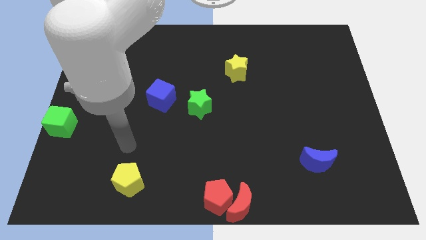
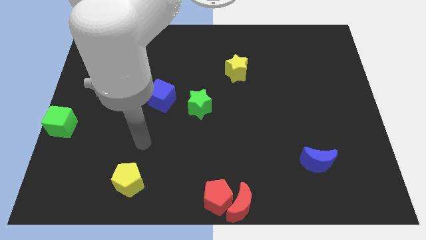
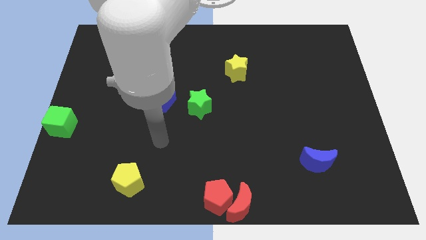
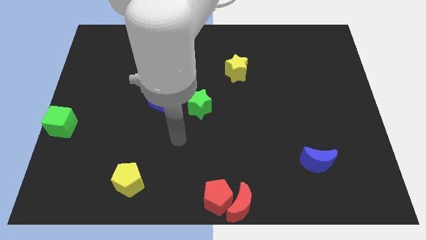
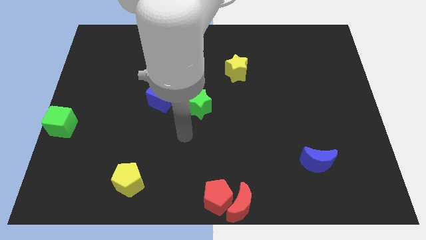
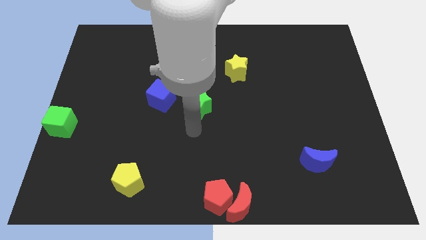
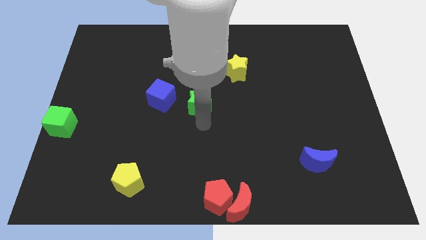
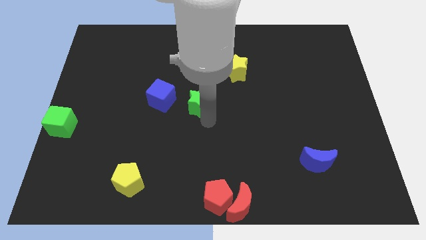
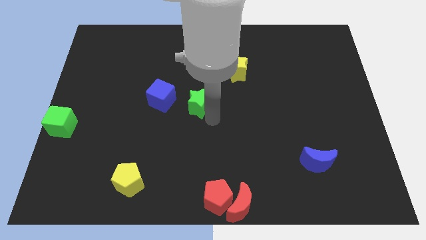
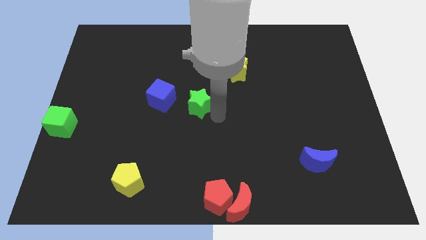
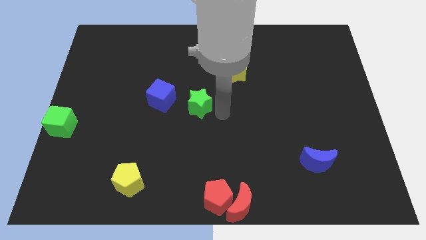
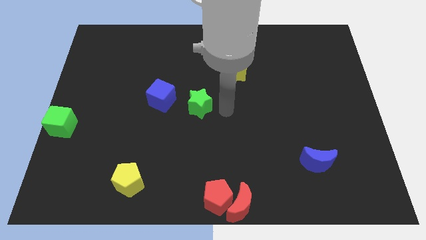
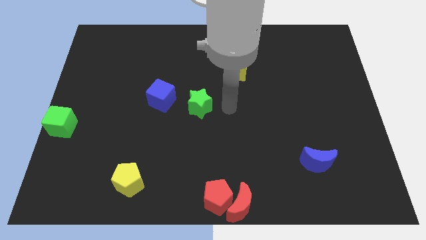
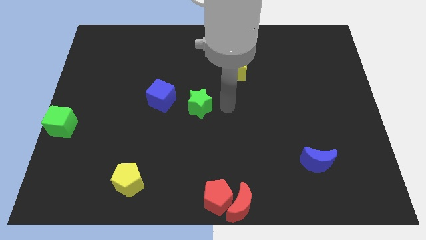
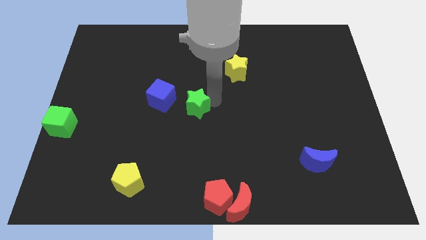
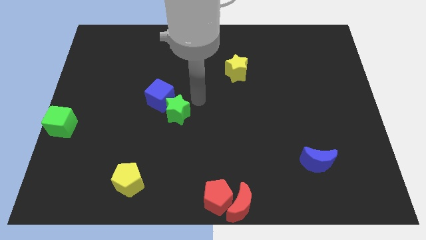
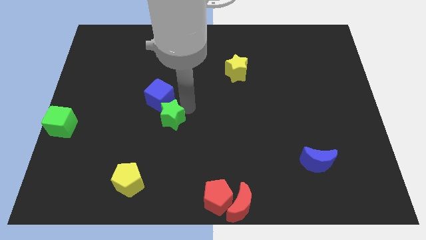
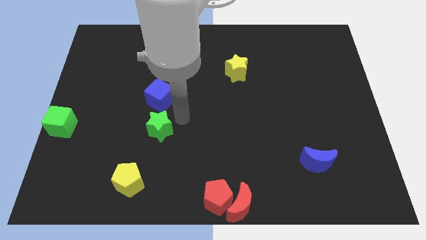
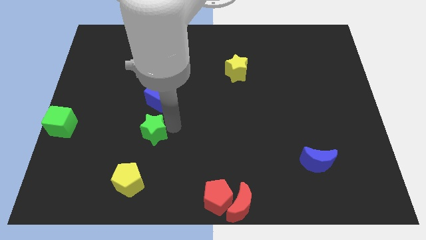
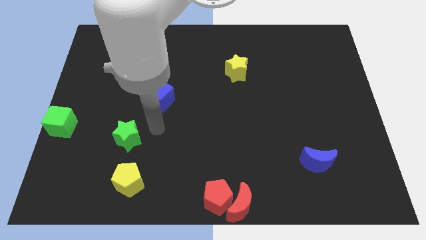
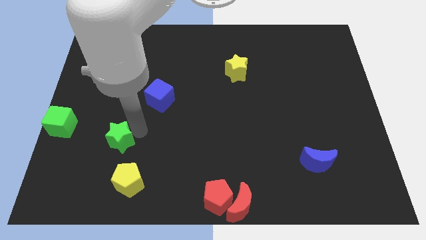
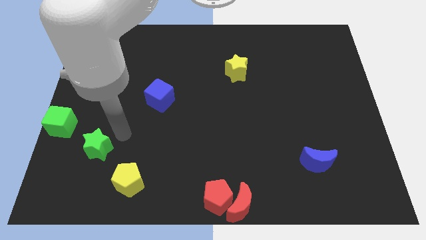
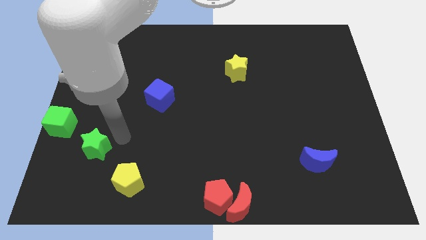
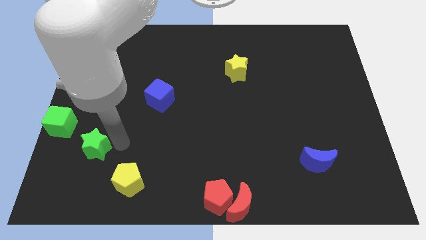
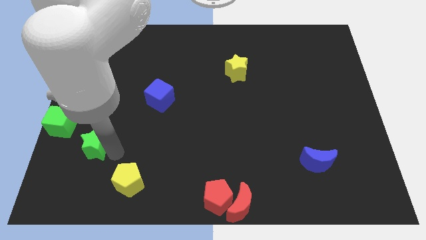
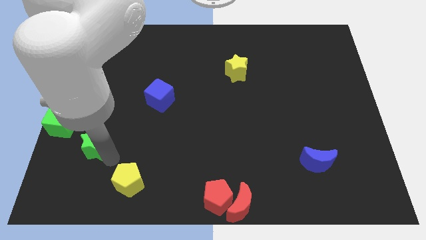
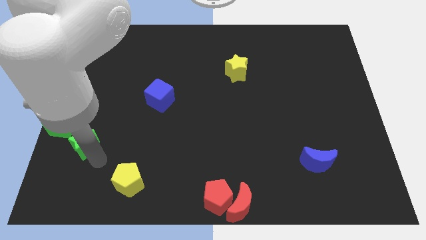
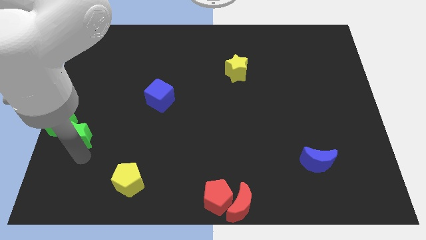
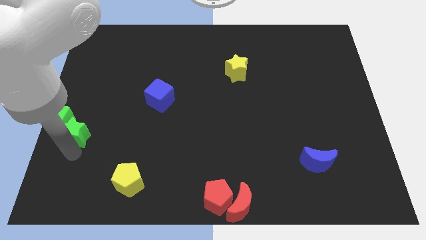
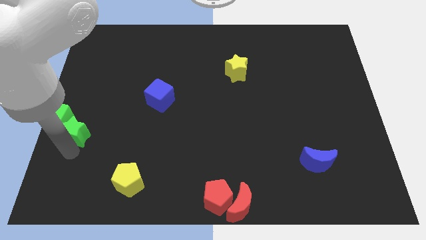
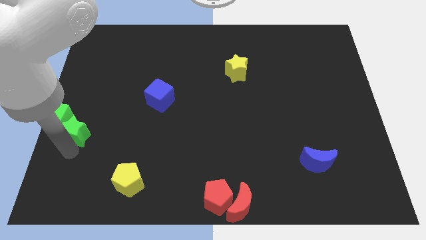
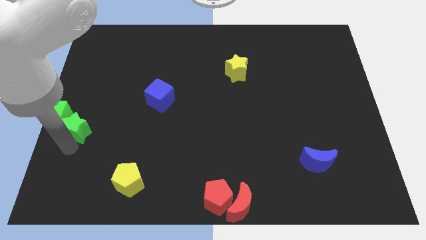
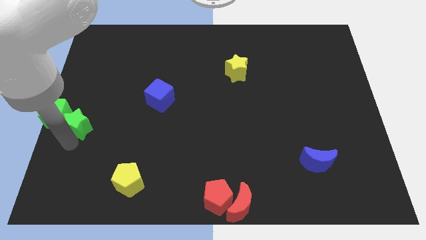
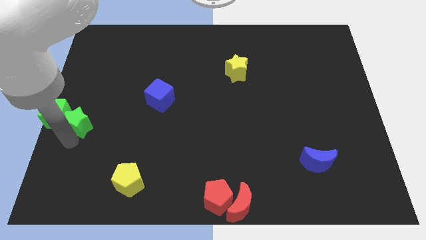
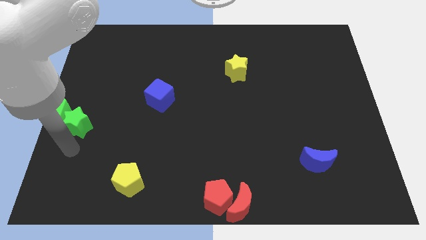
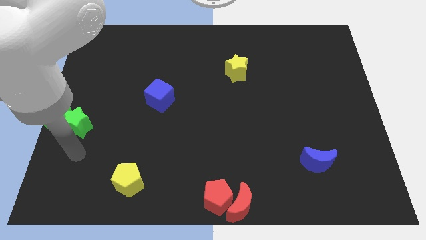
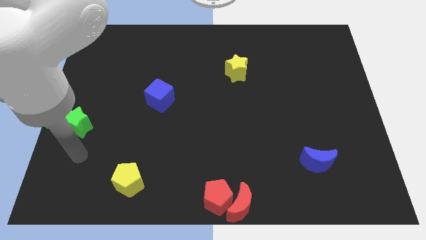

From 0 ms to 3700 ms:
push the green star into the green cube

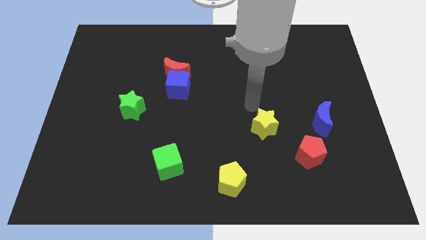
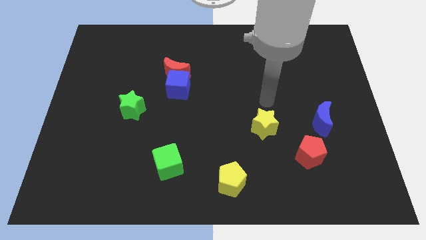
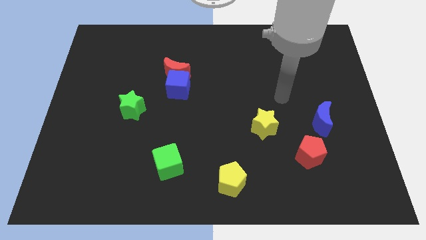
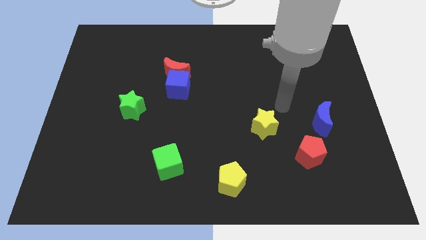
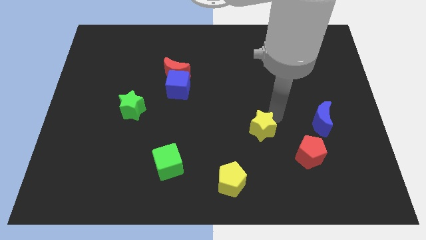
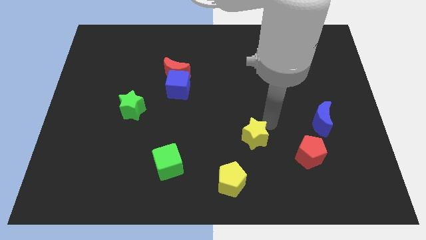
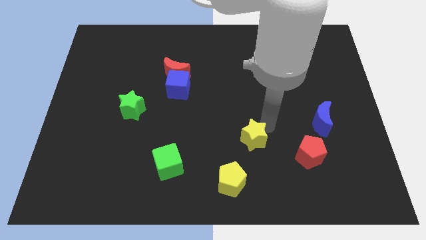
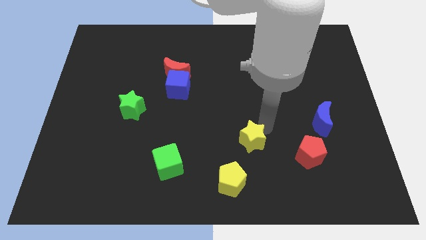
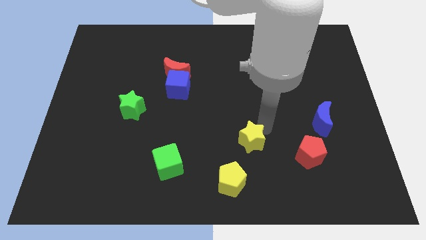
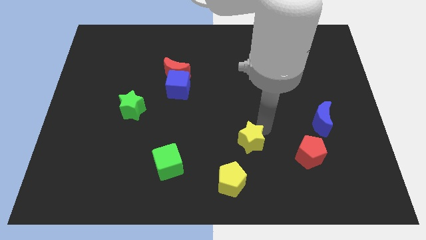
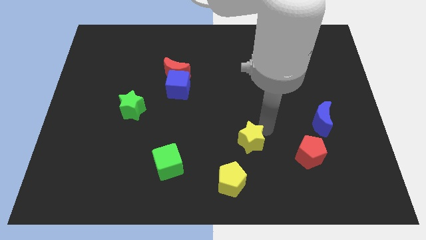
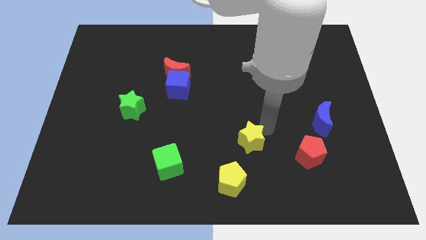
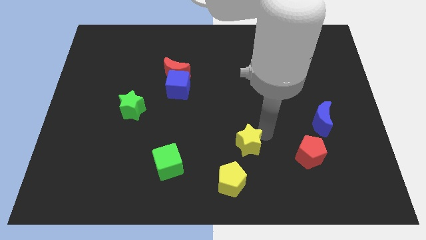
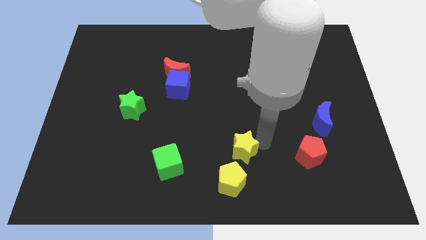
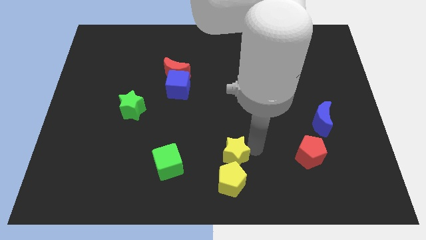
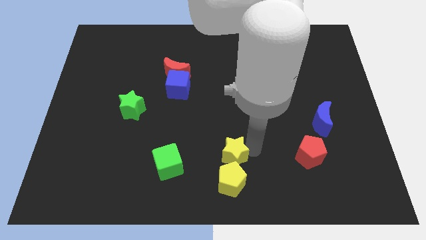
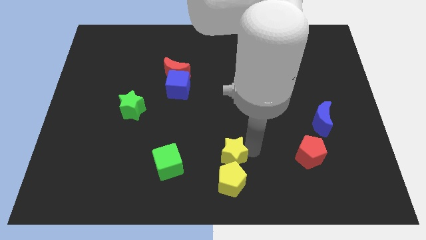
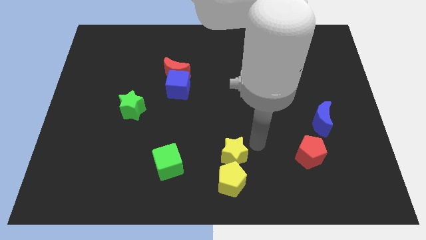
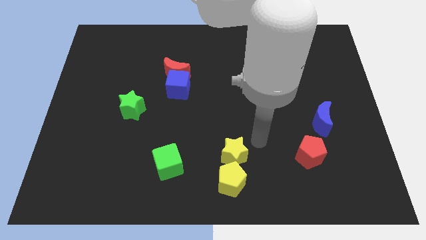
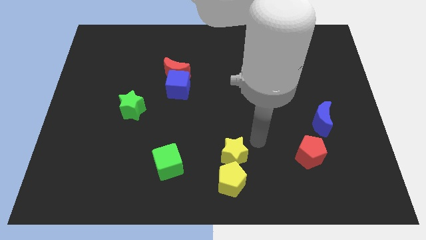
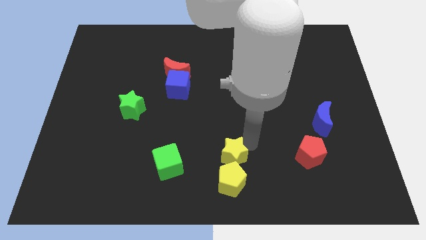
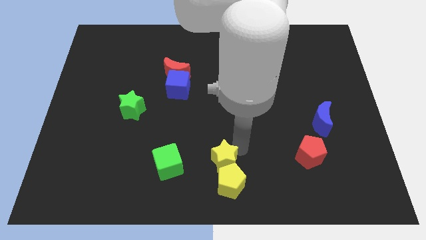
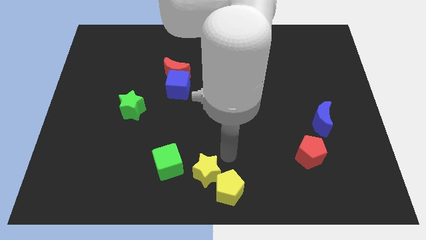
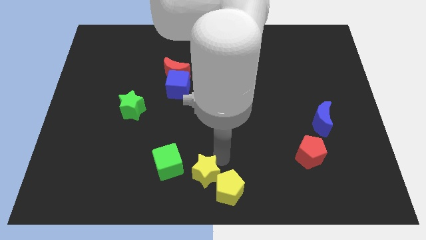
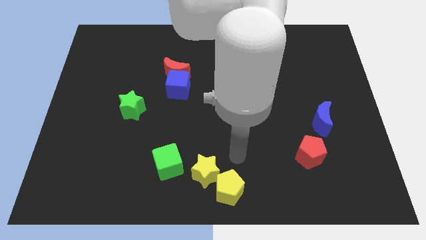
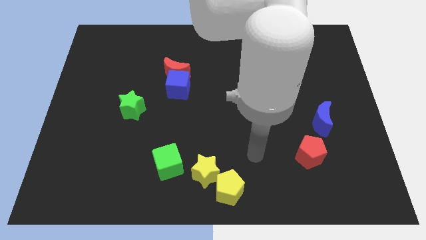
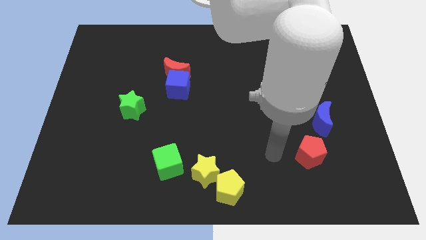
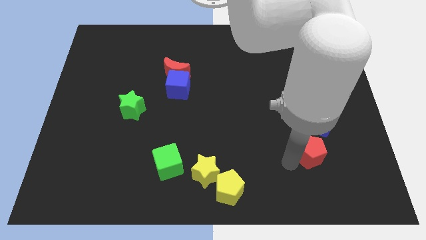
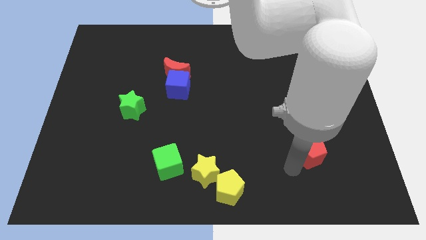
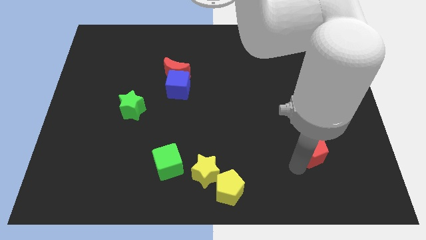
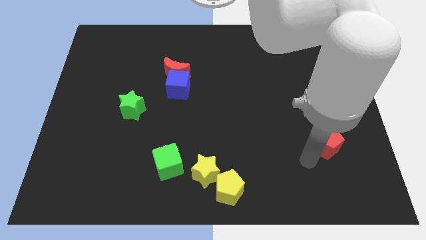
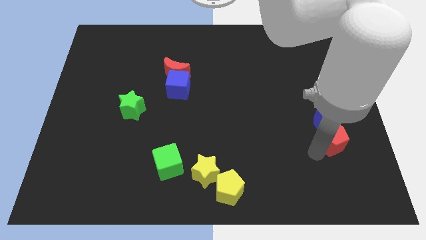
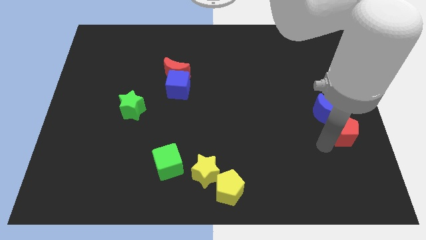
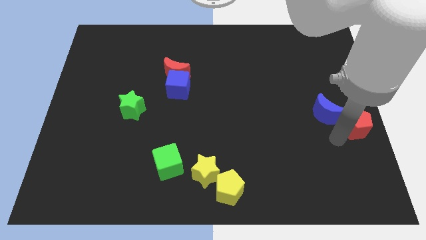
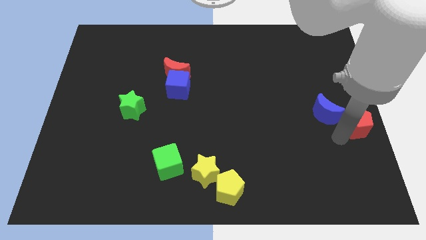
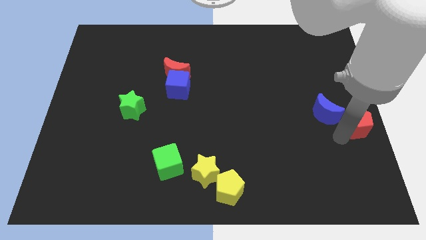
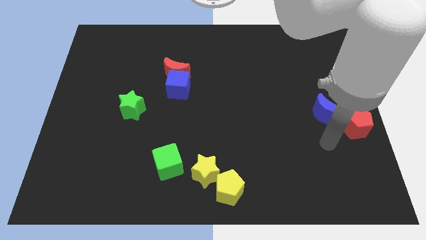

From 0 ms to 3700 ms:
place the yellow star in between the green cube and the yellow pentagon to form a diagnoal line

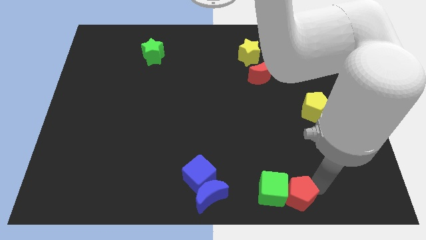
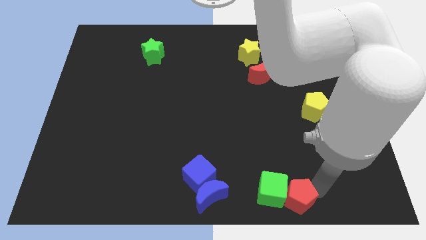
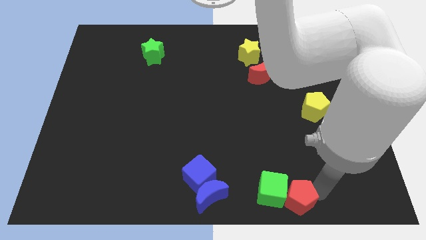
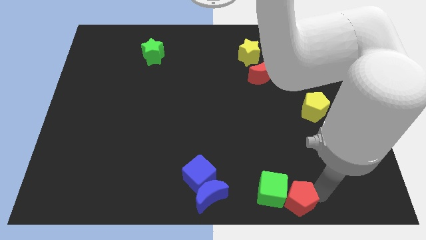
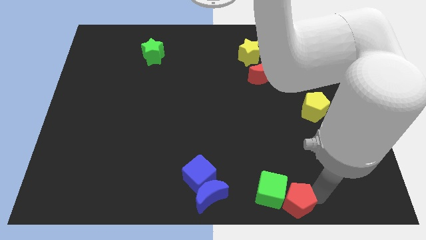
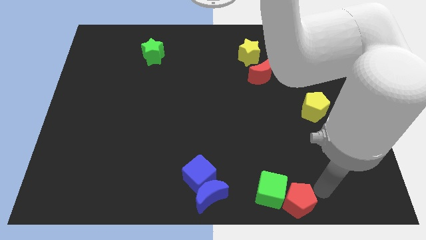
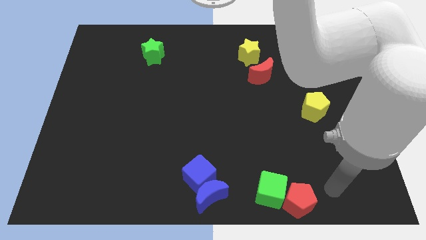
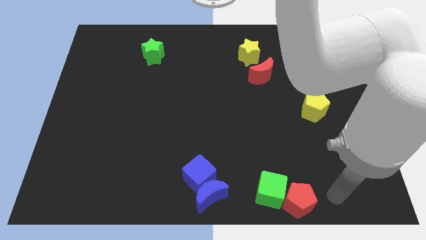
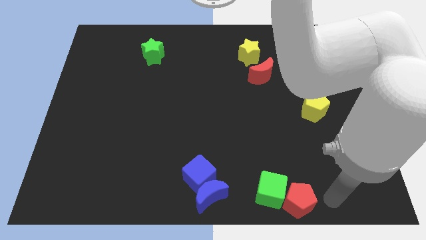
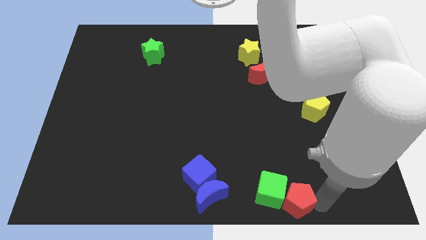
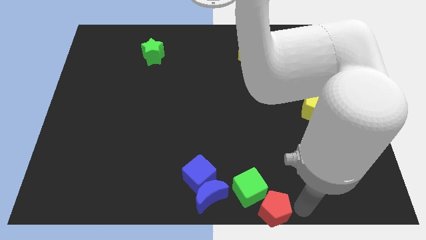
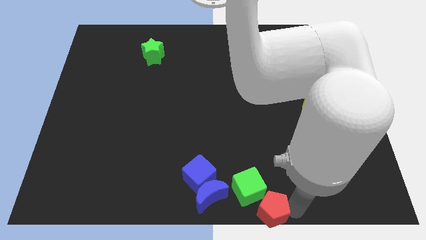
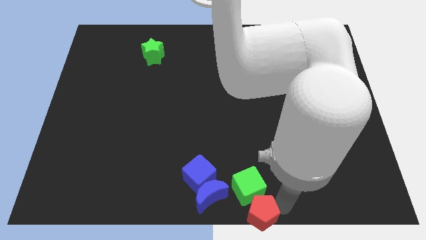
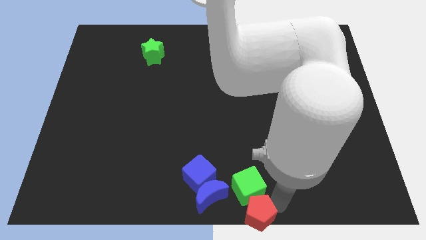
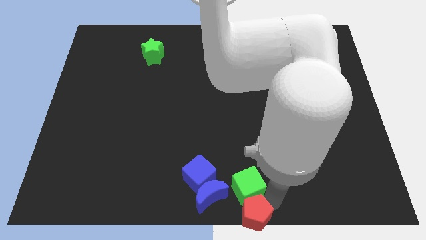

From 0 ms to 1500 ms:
move the red pentagon below the green cube
